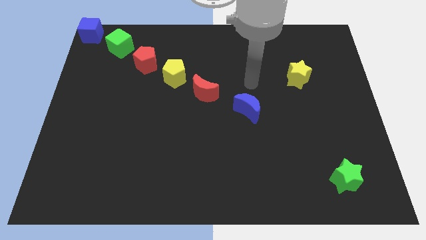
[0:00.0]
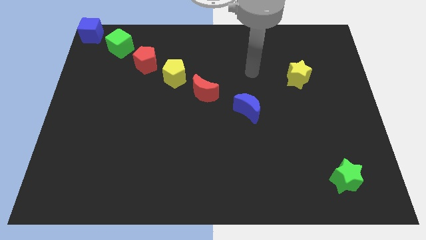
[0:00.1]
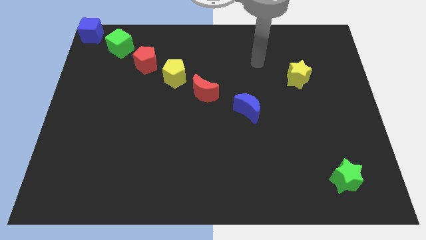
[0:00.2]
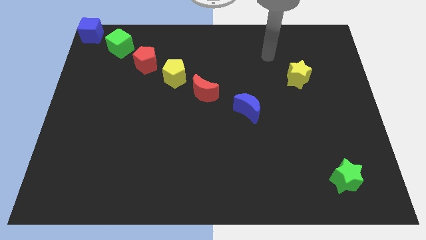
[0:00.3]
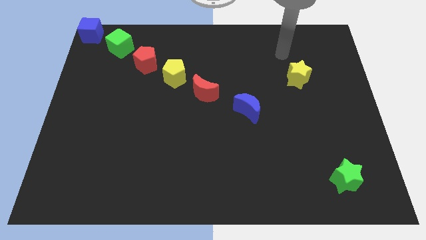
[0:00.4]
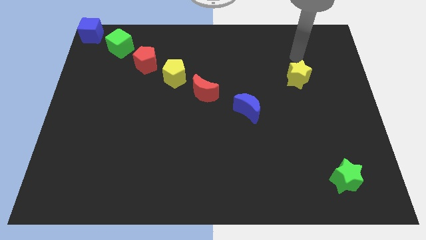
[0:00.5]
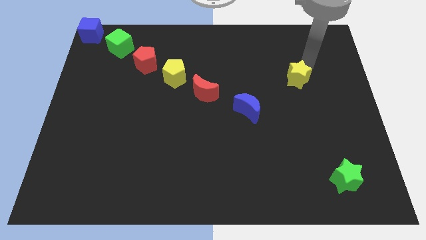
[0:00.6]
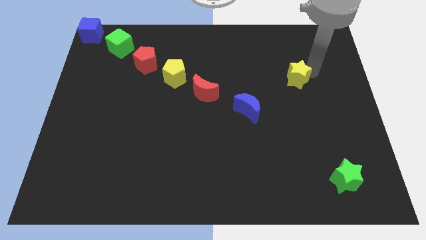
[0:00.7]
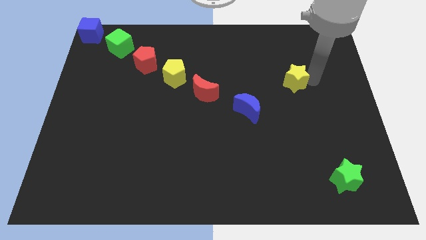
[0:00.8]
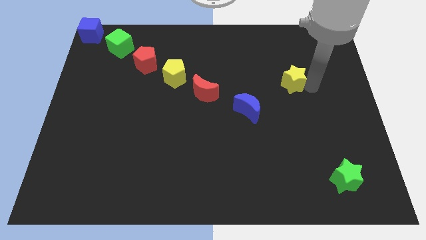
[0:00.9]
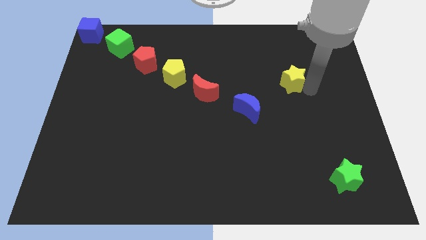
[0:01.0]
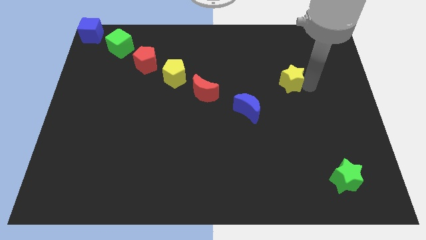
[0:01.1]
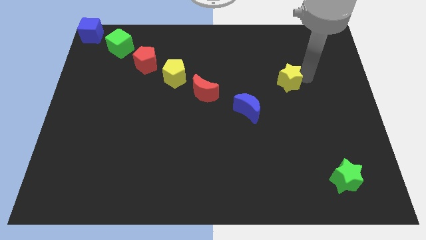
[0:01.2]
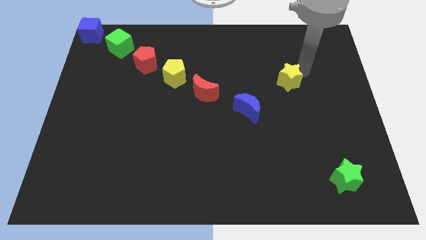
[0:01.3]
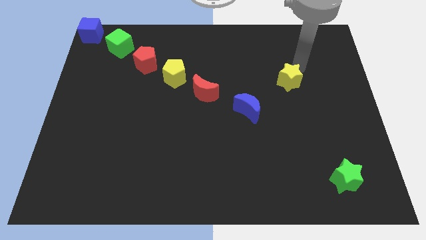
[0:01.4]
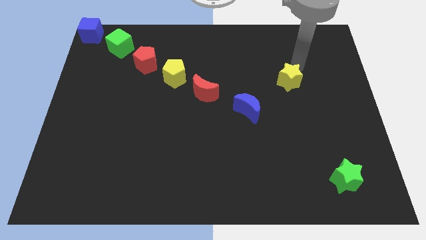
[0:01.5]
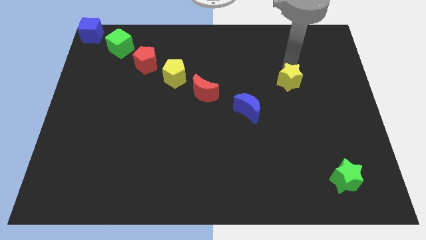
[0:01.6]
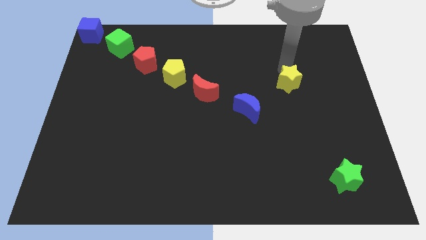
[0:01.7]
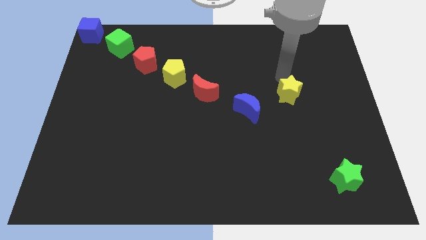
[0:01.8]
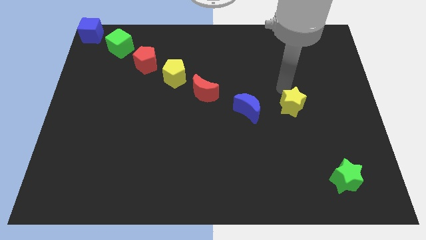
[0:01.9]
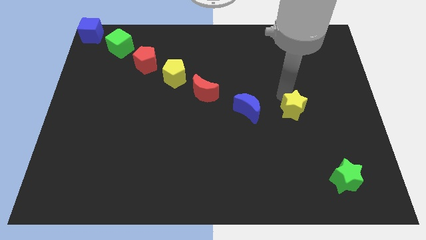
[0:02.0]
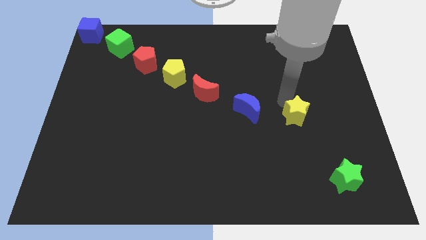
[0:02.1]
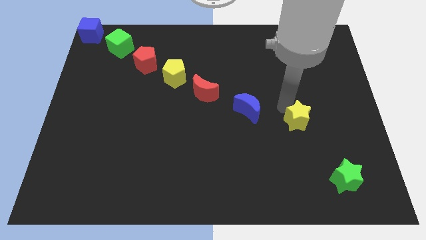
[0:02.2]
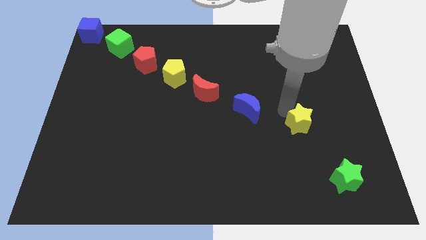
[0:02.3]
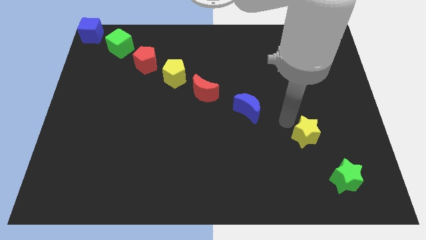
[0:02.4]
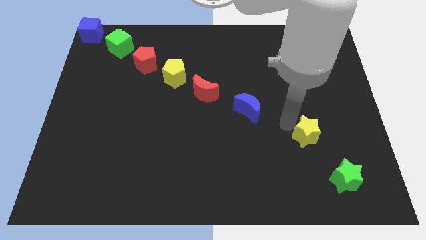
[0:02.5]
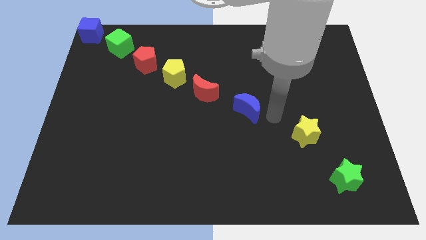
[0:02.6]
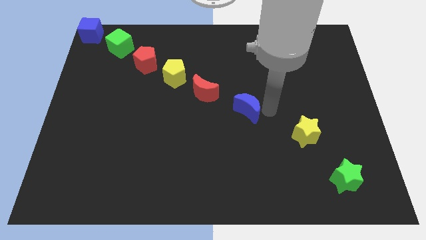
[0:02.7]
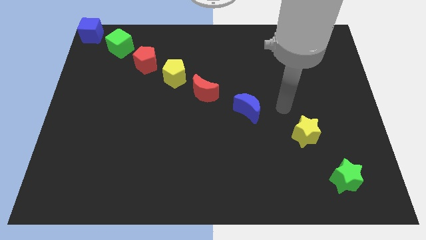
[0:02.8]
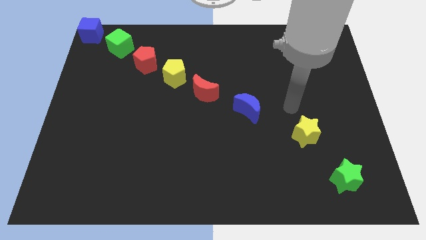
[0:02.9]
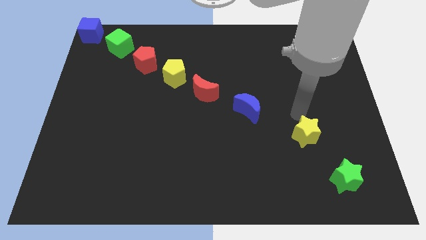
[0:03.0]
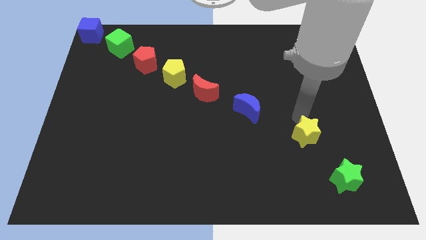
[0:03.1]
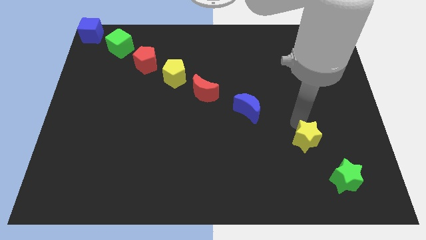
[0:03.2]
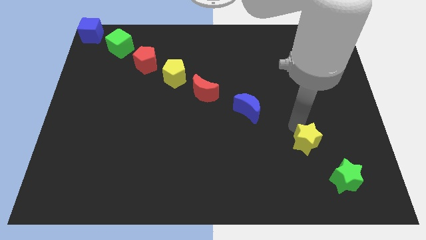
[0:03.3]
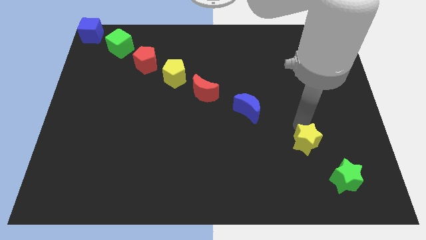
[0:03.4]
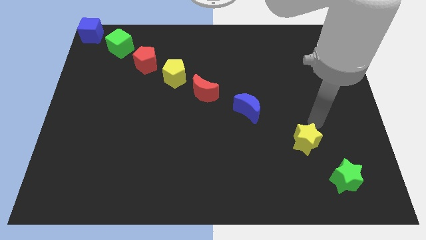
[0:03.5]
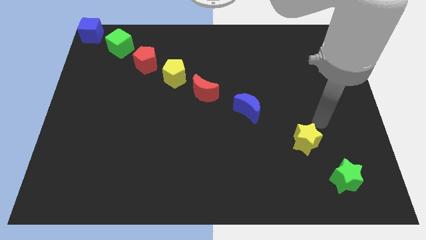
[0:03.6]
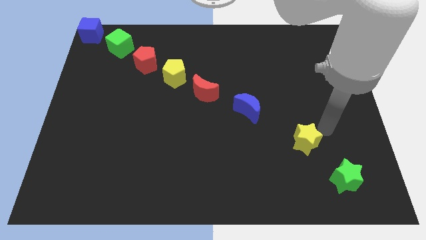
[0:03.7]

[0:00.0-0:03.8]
push the yellow star in between the blue crescent and the green star

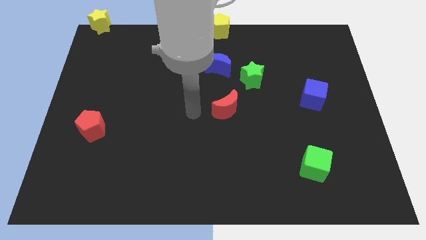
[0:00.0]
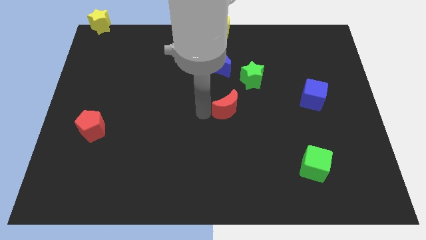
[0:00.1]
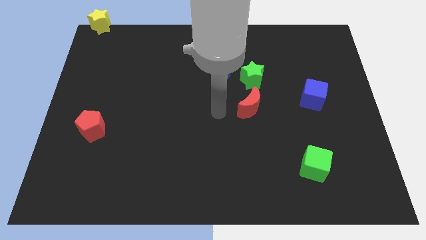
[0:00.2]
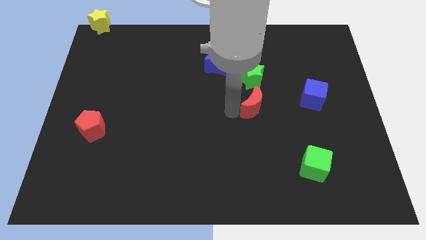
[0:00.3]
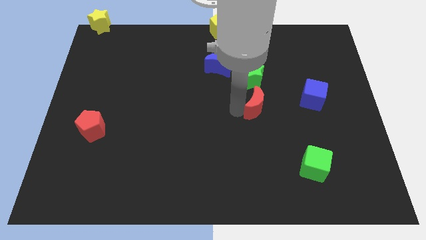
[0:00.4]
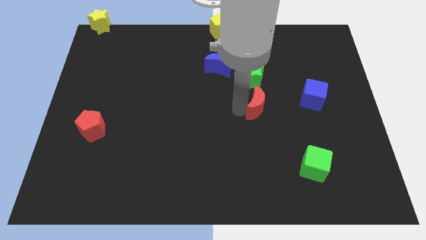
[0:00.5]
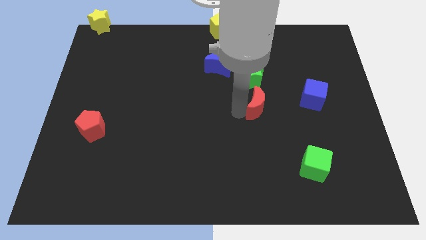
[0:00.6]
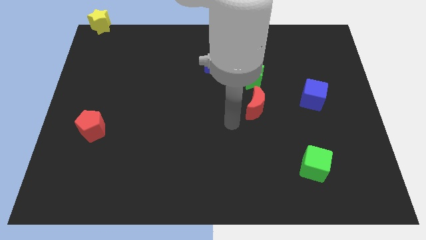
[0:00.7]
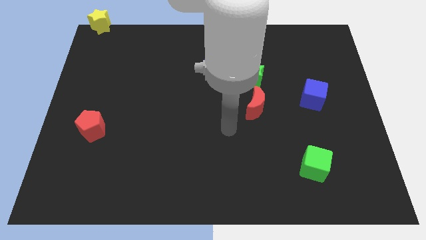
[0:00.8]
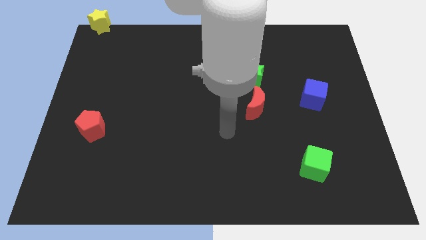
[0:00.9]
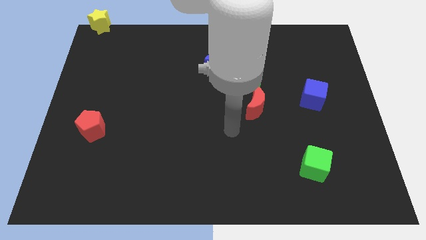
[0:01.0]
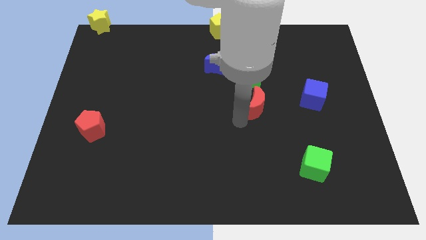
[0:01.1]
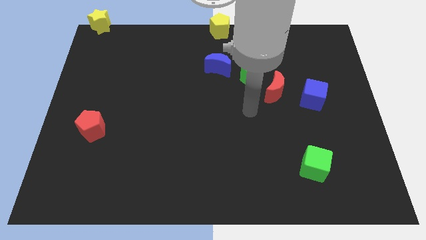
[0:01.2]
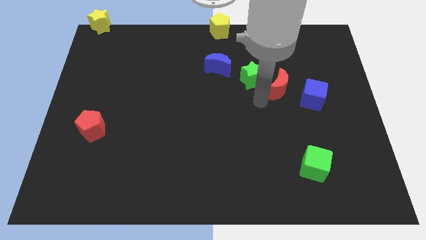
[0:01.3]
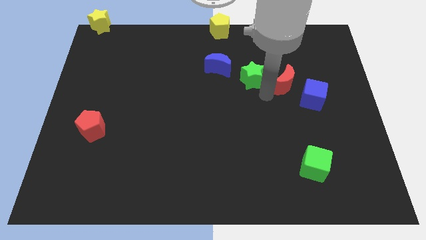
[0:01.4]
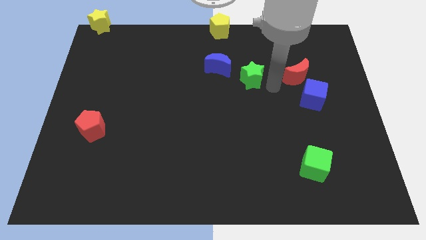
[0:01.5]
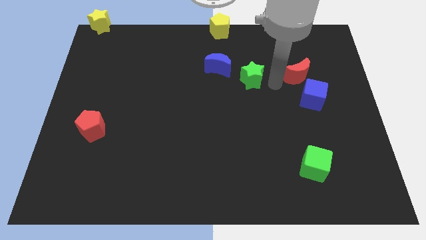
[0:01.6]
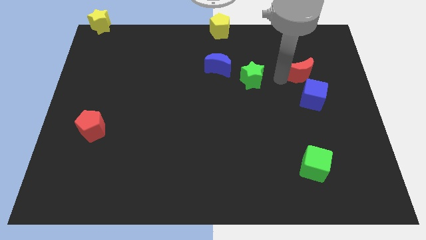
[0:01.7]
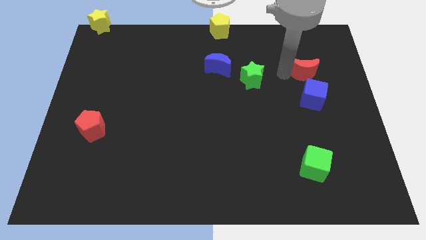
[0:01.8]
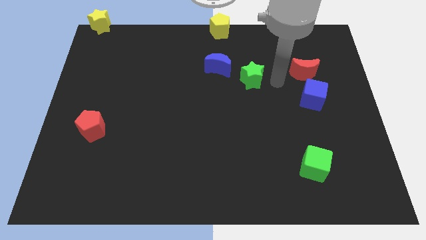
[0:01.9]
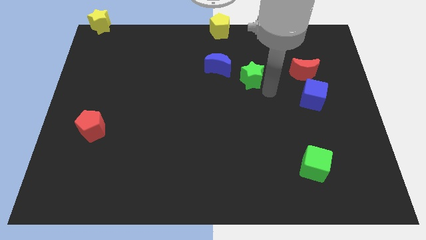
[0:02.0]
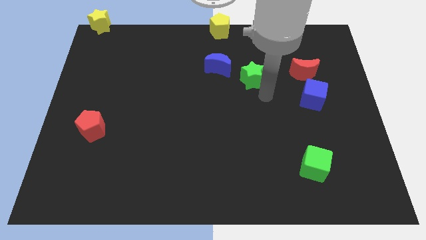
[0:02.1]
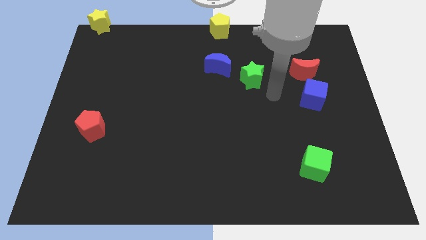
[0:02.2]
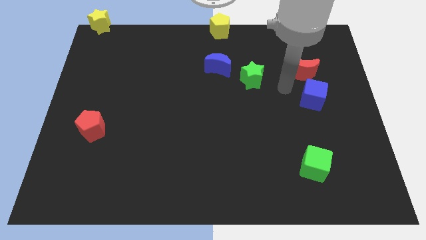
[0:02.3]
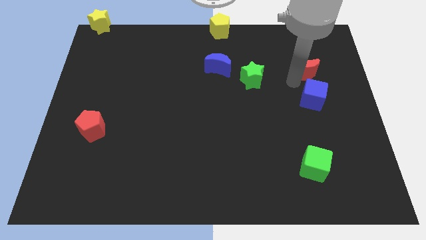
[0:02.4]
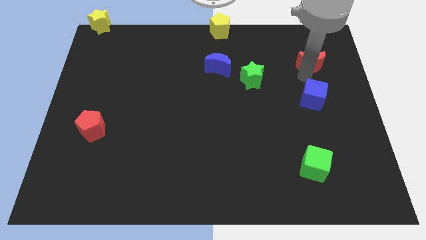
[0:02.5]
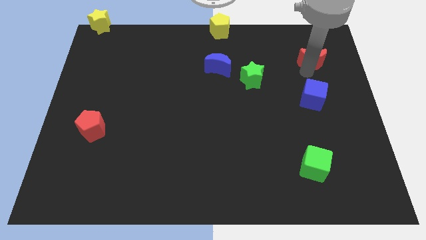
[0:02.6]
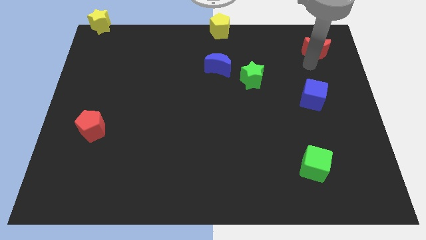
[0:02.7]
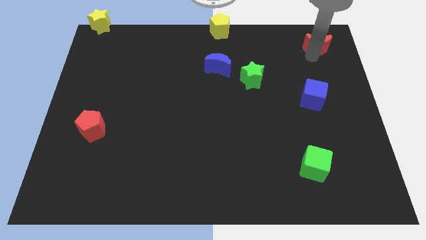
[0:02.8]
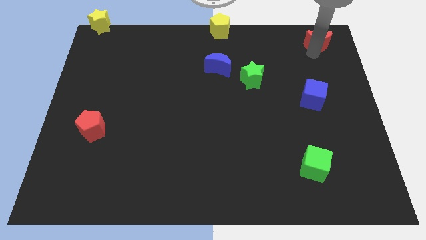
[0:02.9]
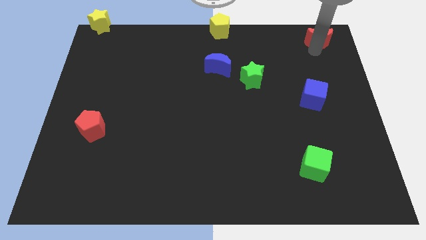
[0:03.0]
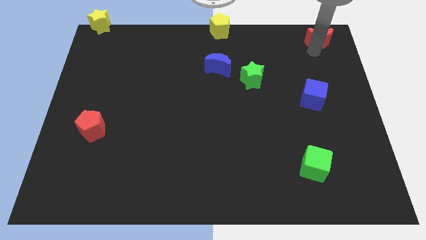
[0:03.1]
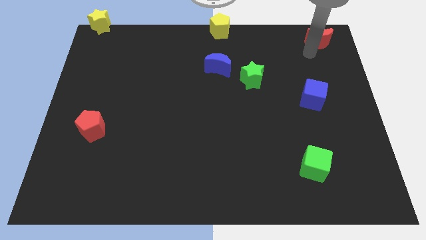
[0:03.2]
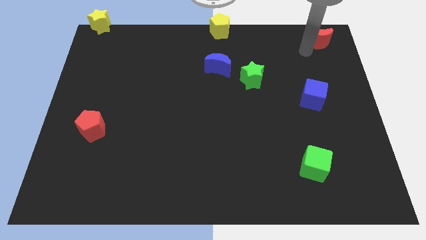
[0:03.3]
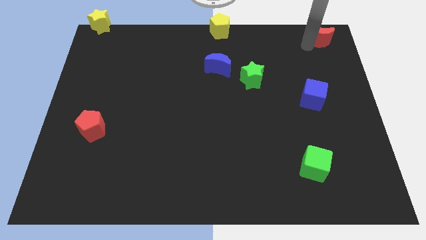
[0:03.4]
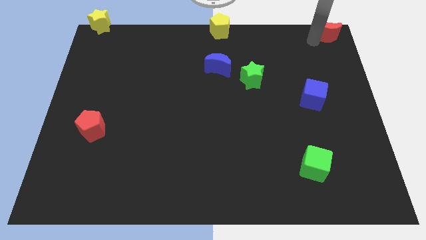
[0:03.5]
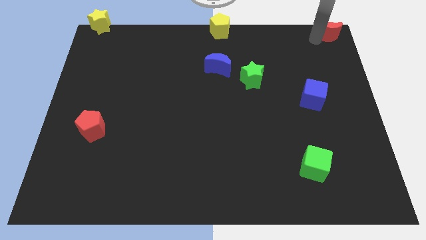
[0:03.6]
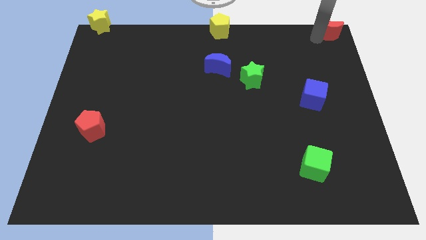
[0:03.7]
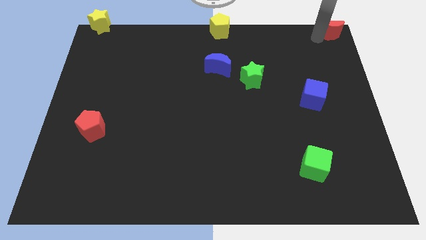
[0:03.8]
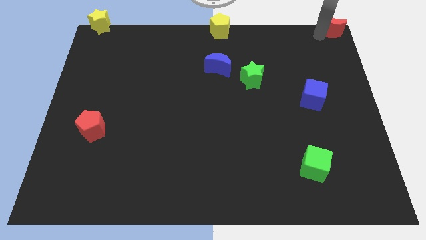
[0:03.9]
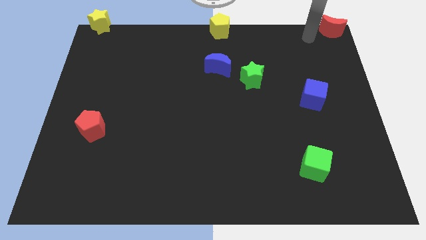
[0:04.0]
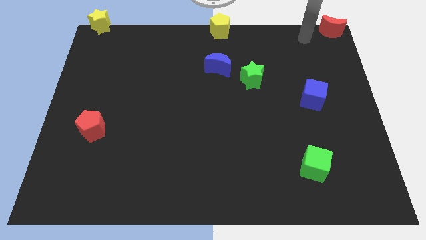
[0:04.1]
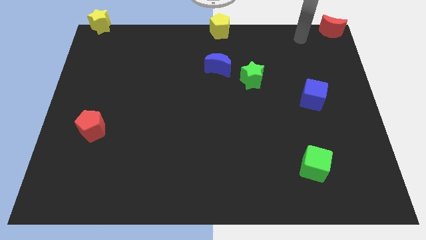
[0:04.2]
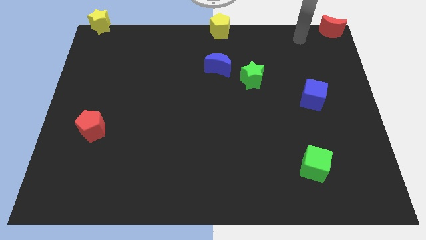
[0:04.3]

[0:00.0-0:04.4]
place red moon to the top right corner of the board

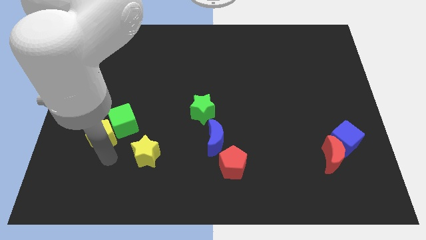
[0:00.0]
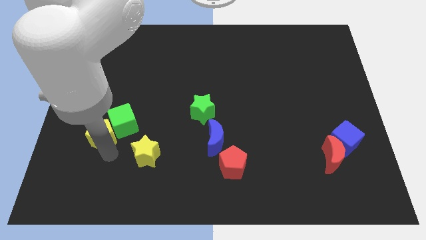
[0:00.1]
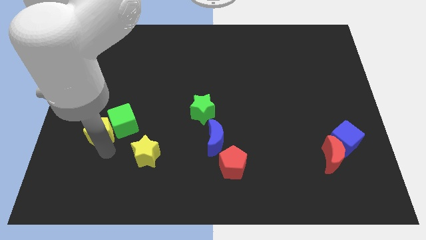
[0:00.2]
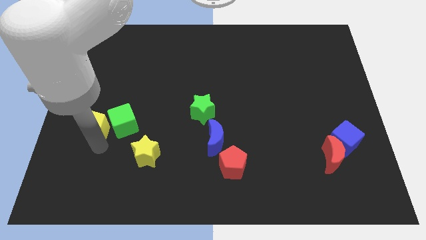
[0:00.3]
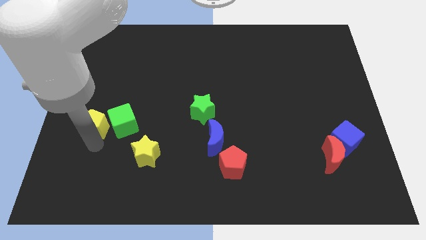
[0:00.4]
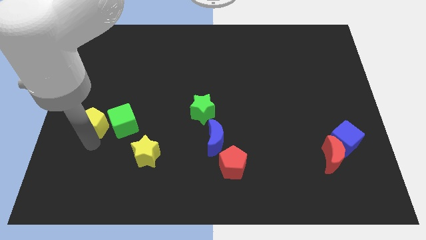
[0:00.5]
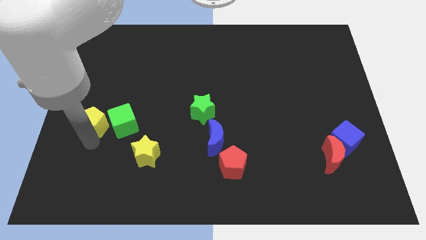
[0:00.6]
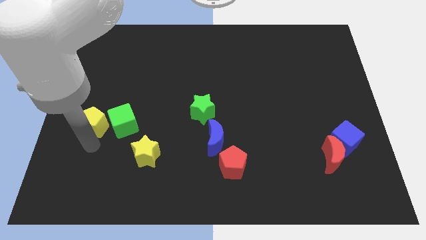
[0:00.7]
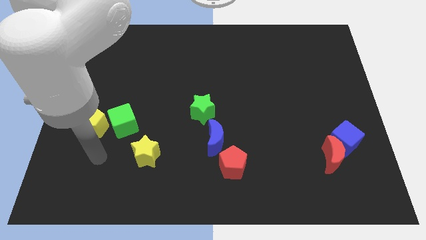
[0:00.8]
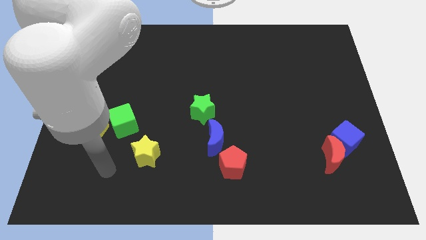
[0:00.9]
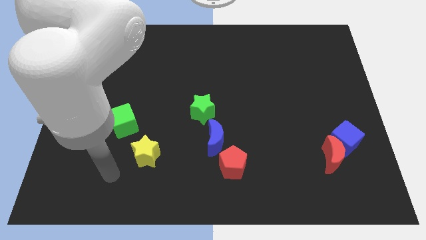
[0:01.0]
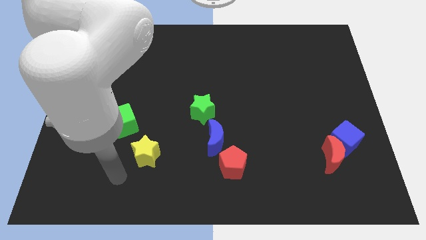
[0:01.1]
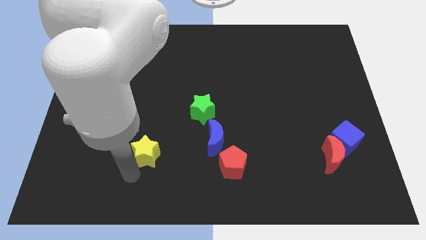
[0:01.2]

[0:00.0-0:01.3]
move yellow pentagon left beside the green cube
